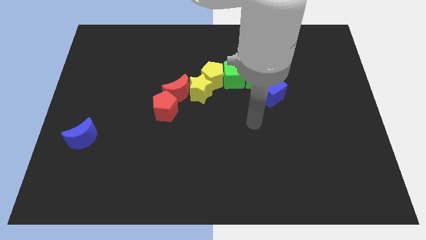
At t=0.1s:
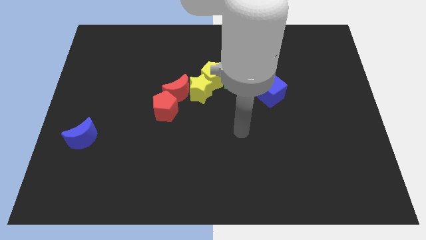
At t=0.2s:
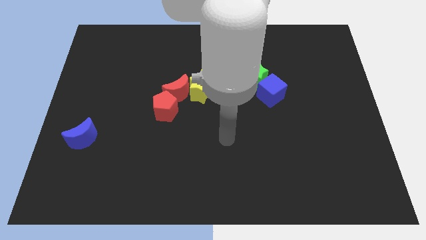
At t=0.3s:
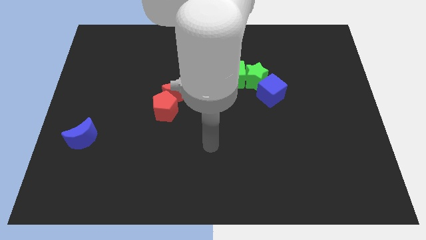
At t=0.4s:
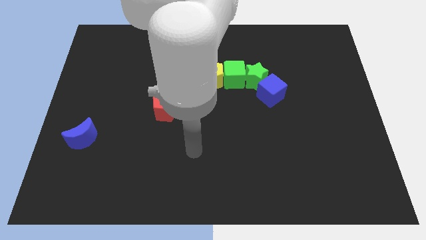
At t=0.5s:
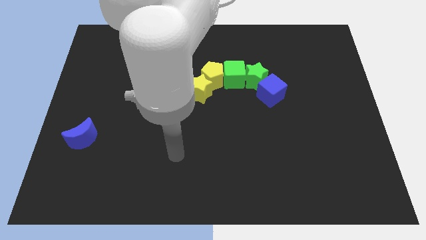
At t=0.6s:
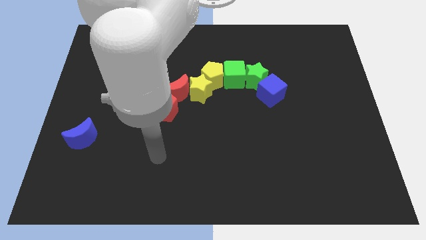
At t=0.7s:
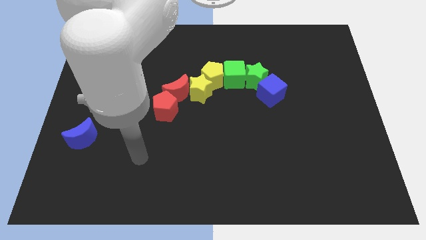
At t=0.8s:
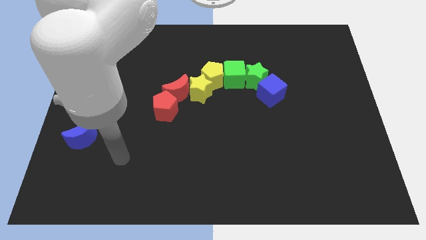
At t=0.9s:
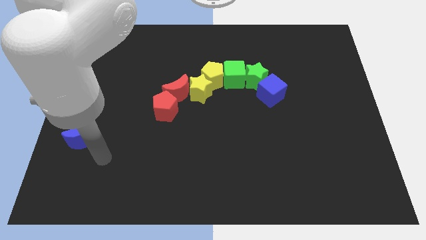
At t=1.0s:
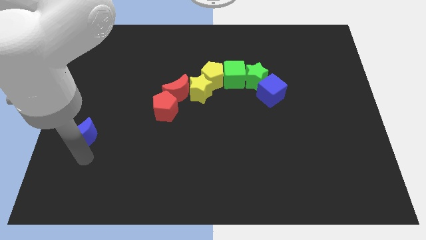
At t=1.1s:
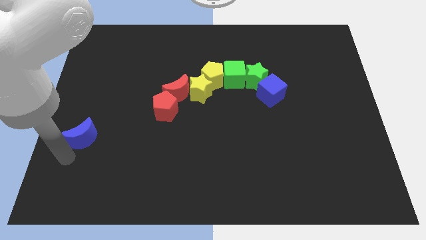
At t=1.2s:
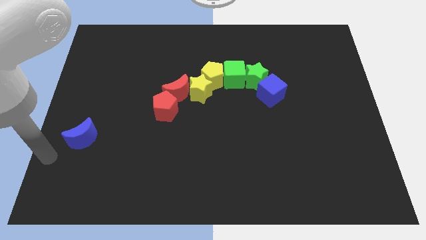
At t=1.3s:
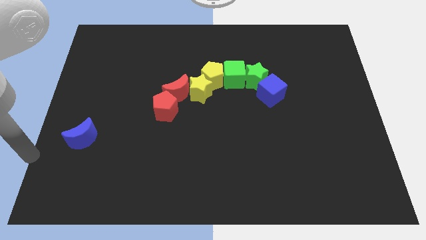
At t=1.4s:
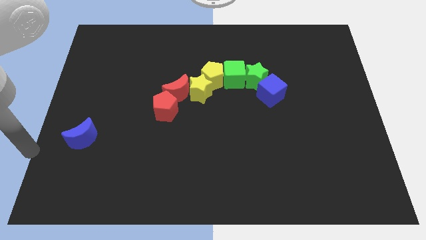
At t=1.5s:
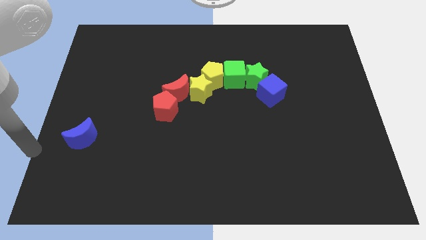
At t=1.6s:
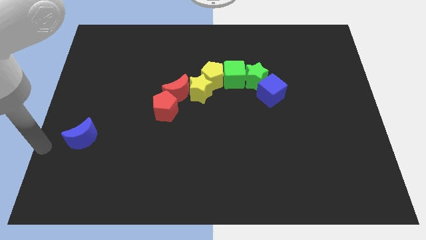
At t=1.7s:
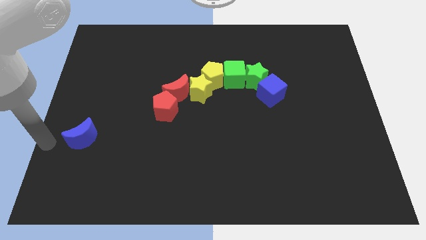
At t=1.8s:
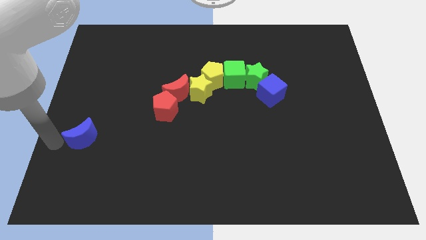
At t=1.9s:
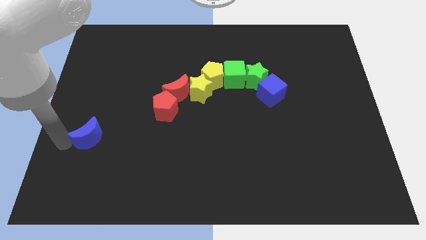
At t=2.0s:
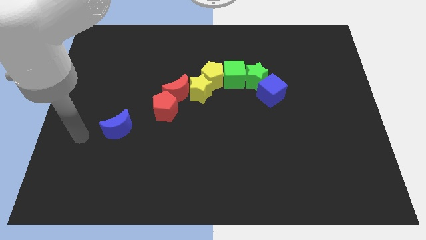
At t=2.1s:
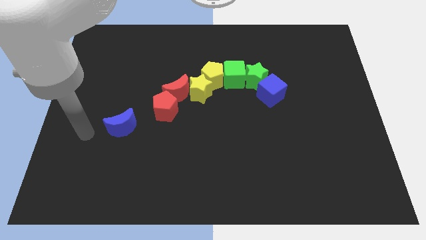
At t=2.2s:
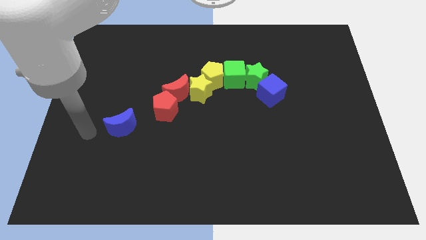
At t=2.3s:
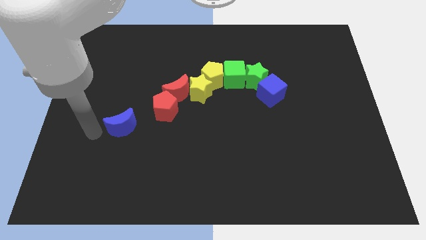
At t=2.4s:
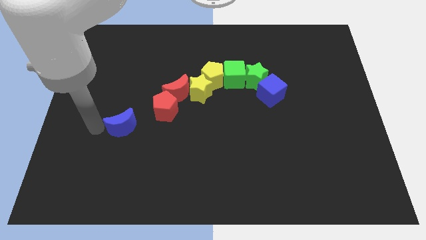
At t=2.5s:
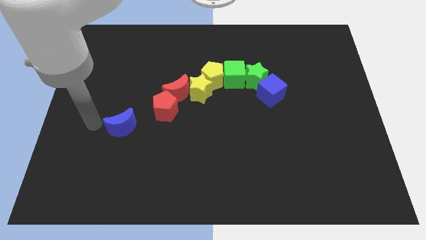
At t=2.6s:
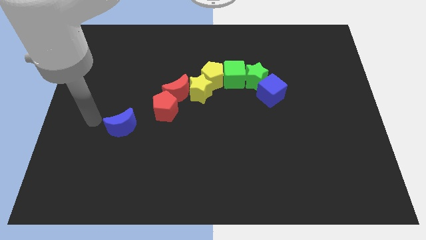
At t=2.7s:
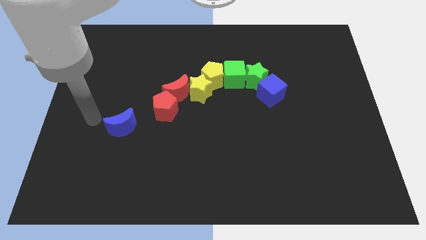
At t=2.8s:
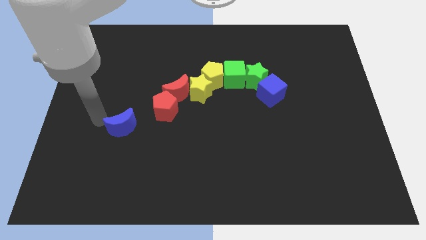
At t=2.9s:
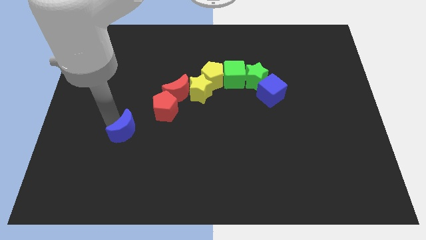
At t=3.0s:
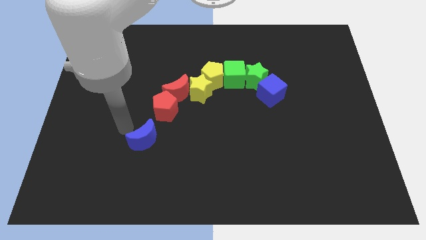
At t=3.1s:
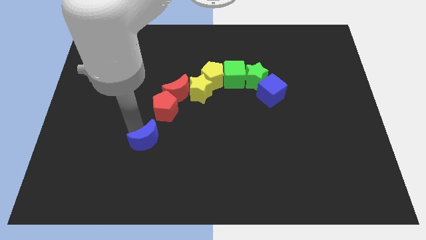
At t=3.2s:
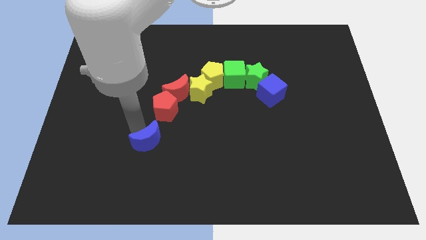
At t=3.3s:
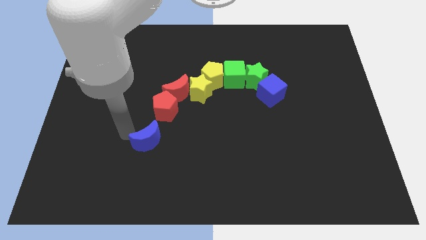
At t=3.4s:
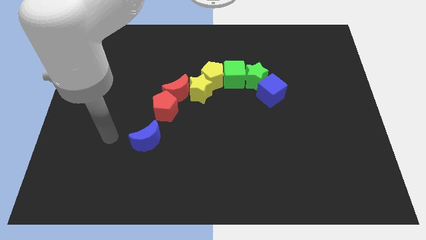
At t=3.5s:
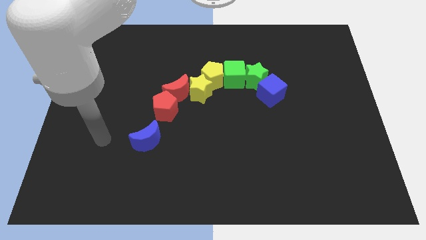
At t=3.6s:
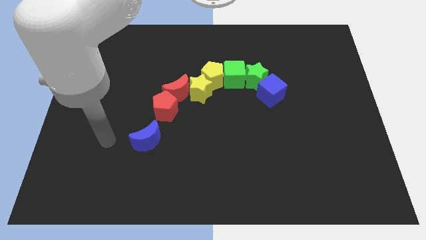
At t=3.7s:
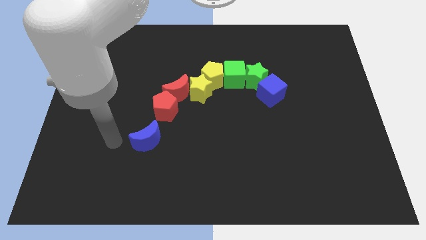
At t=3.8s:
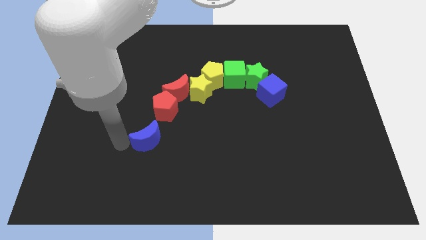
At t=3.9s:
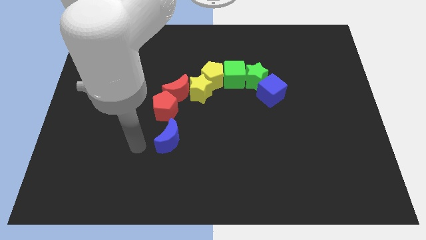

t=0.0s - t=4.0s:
move the blue crescent below the red pentagon

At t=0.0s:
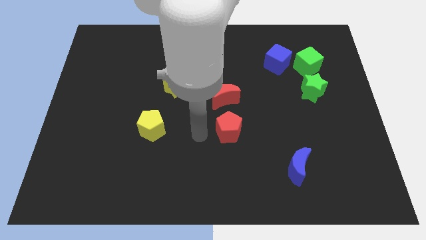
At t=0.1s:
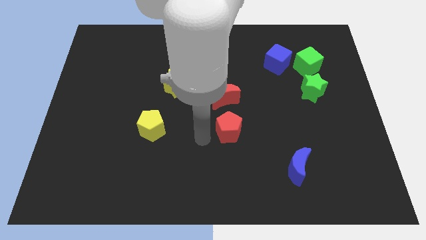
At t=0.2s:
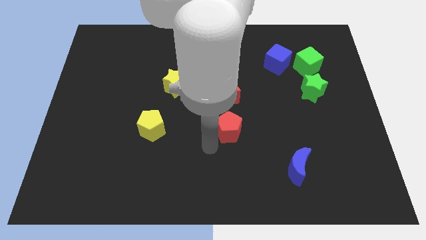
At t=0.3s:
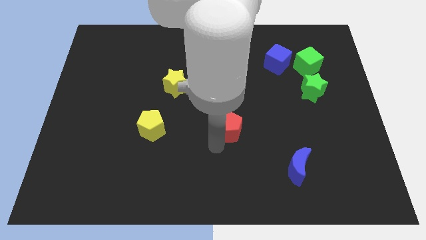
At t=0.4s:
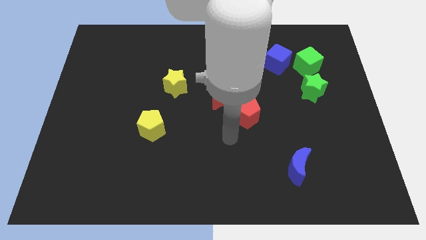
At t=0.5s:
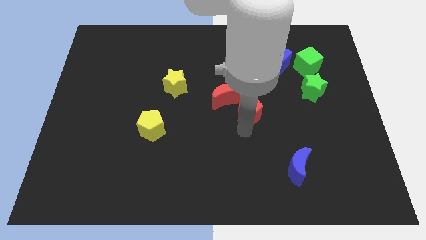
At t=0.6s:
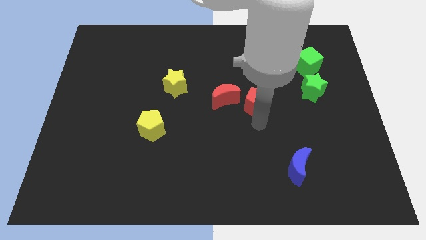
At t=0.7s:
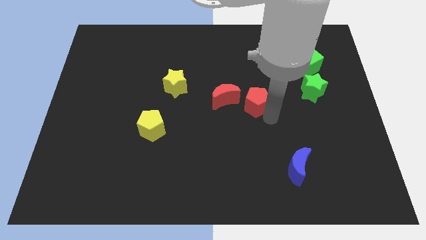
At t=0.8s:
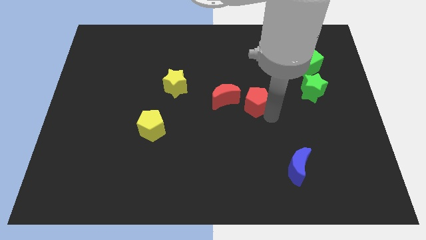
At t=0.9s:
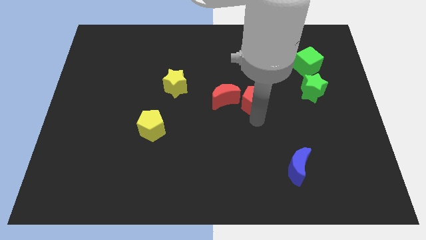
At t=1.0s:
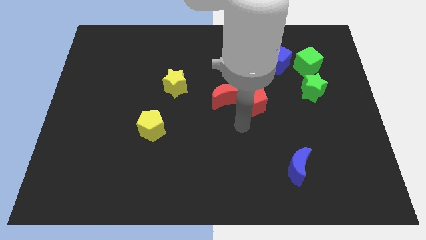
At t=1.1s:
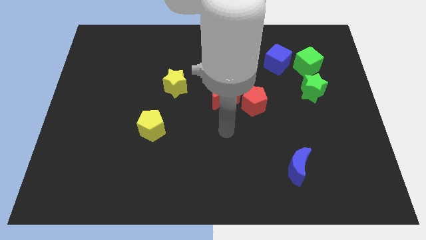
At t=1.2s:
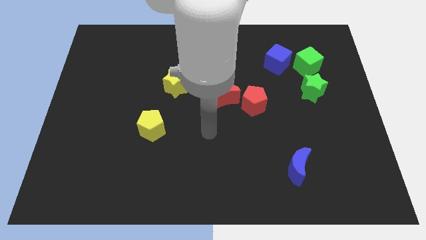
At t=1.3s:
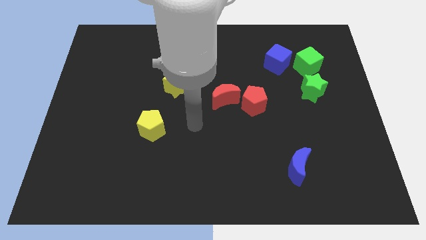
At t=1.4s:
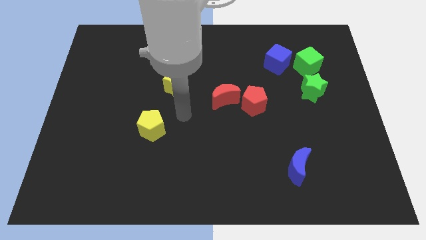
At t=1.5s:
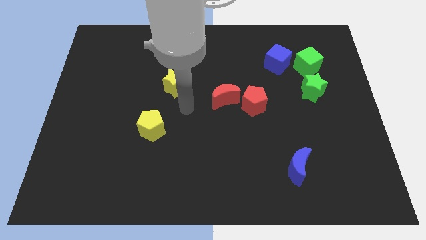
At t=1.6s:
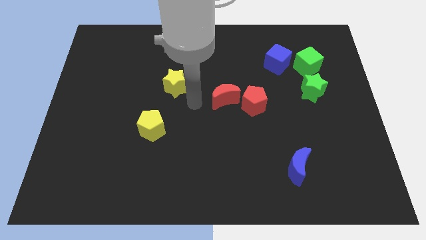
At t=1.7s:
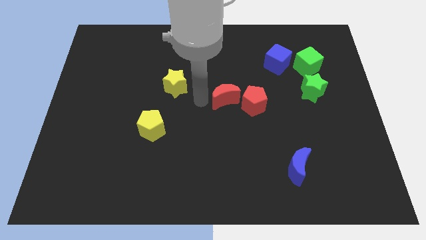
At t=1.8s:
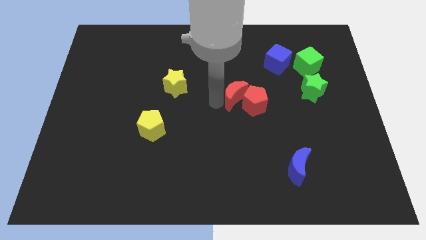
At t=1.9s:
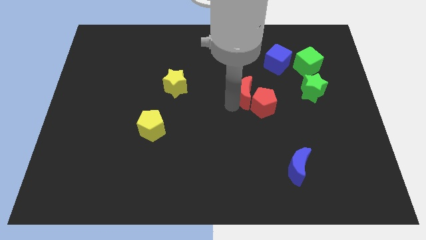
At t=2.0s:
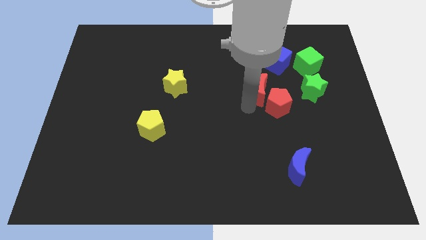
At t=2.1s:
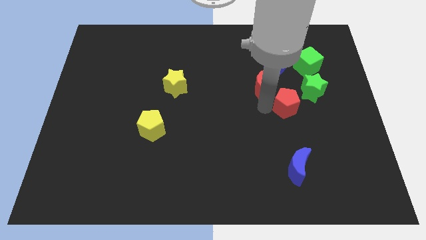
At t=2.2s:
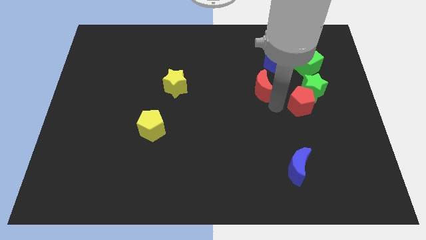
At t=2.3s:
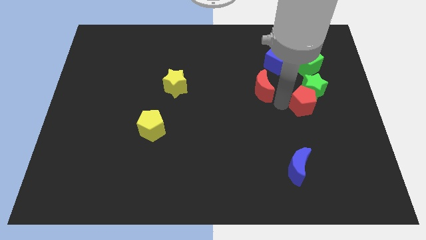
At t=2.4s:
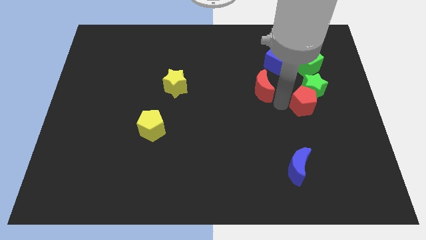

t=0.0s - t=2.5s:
push the red pentagon into green star

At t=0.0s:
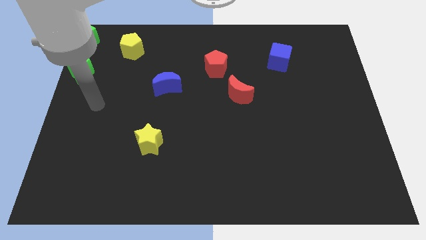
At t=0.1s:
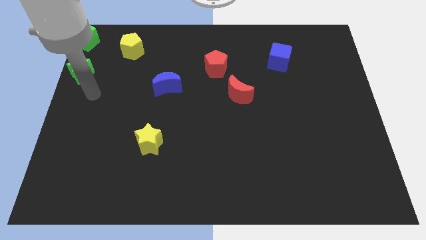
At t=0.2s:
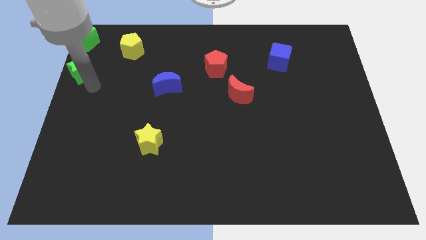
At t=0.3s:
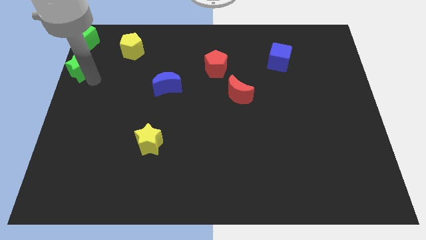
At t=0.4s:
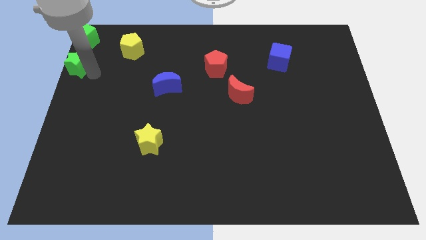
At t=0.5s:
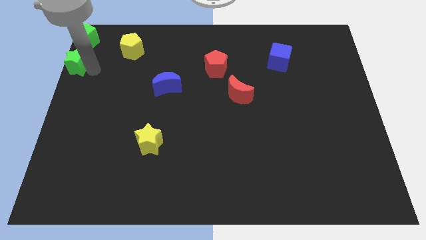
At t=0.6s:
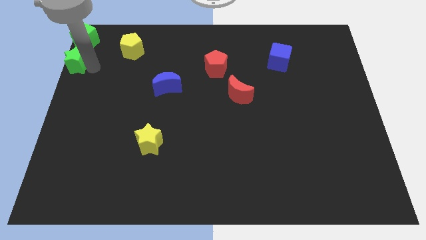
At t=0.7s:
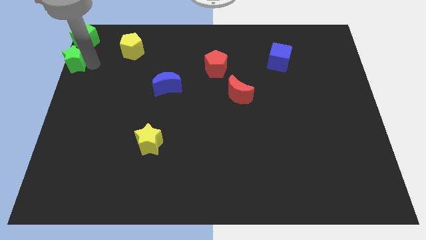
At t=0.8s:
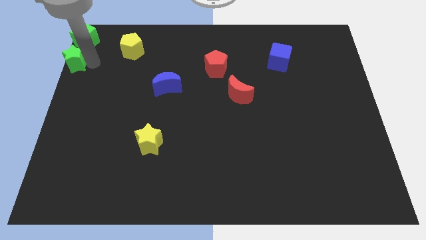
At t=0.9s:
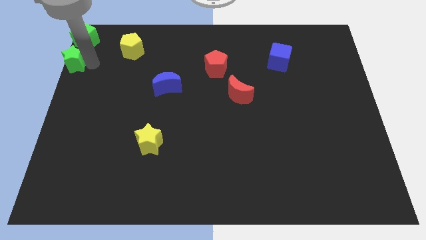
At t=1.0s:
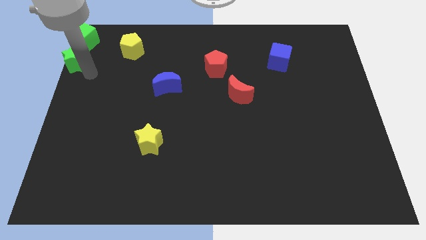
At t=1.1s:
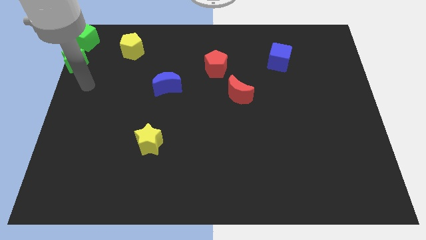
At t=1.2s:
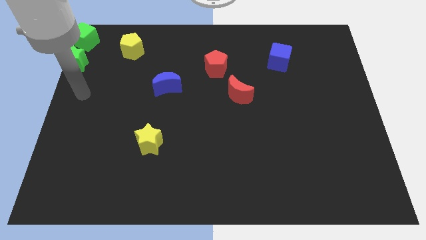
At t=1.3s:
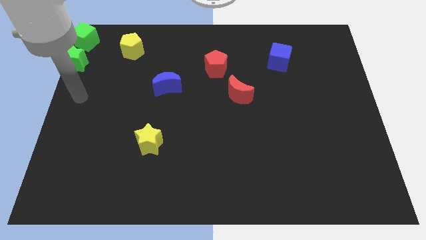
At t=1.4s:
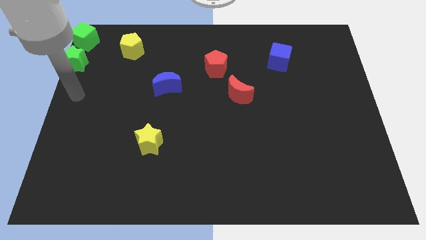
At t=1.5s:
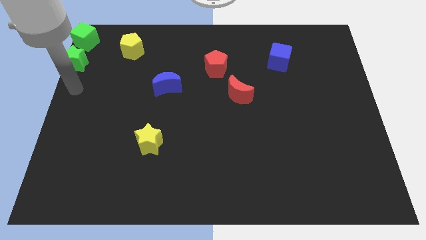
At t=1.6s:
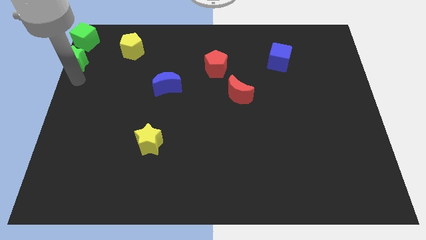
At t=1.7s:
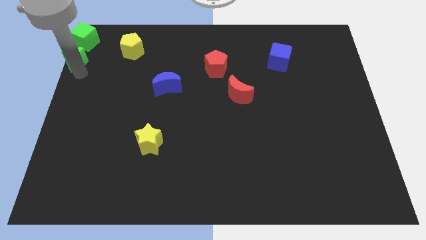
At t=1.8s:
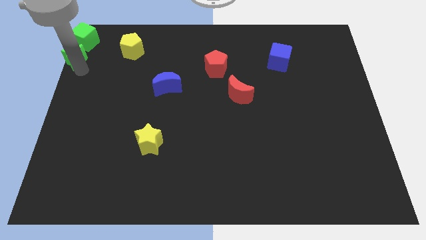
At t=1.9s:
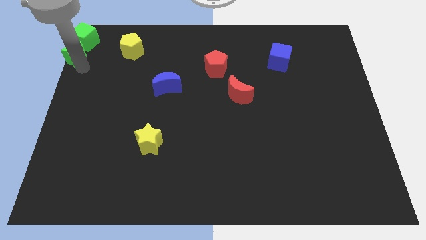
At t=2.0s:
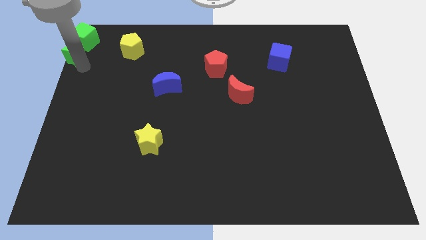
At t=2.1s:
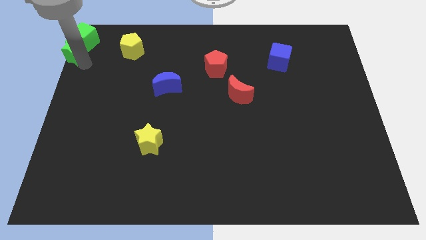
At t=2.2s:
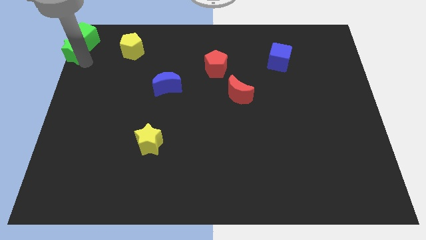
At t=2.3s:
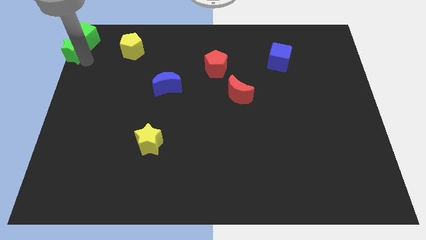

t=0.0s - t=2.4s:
push the green star into the green cube
